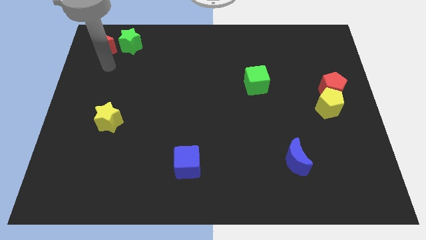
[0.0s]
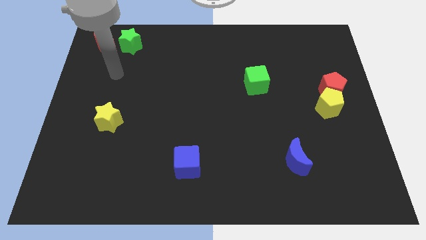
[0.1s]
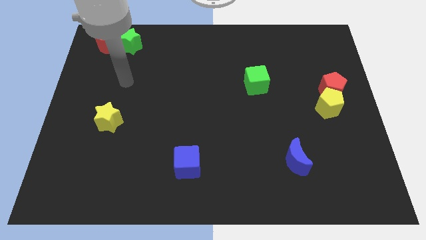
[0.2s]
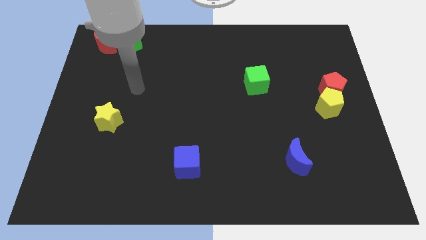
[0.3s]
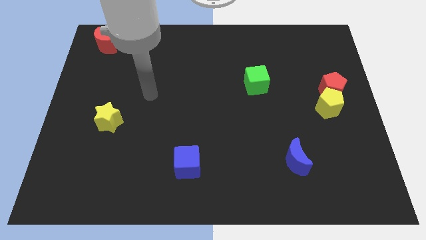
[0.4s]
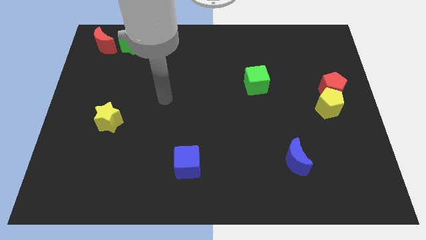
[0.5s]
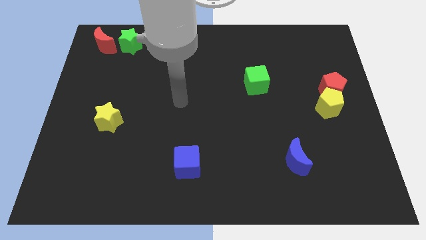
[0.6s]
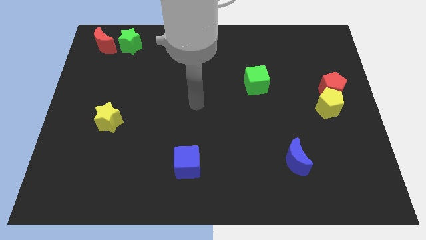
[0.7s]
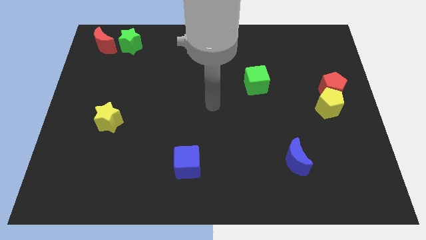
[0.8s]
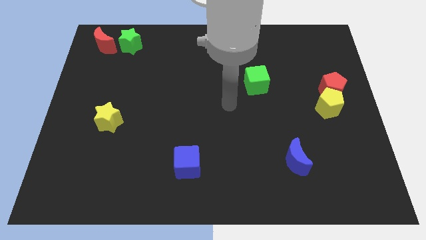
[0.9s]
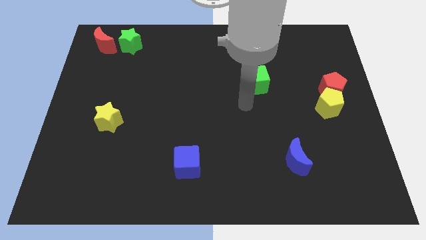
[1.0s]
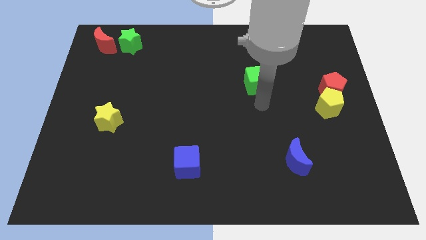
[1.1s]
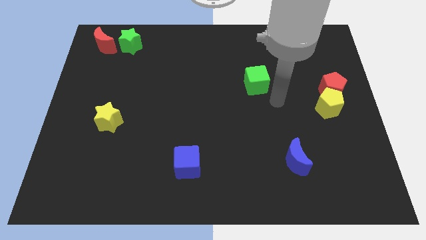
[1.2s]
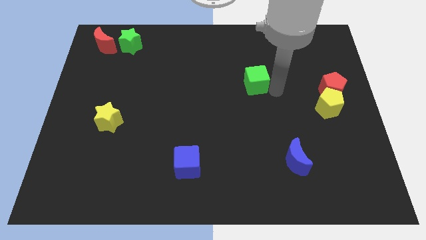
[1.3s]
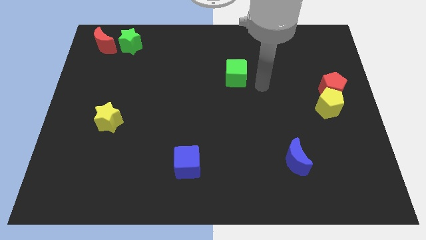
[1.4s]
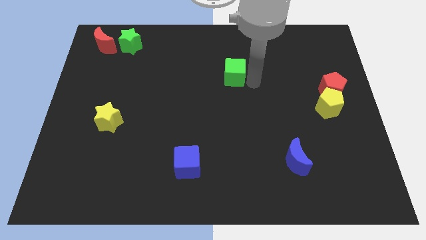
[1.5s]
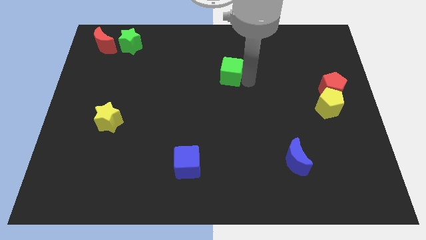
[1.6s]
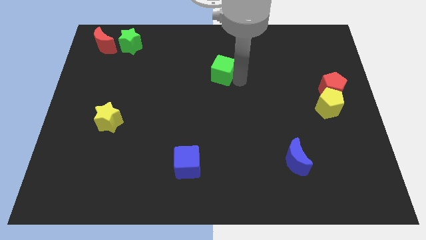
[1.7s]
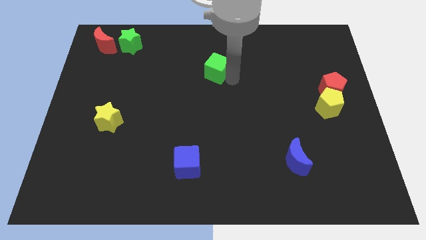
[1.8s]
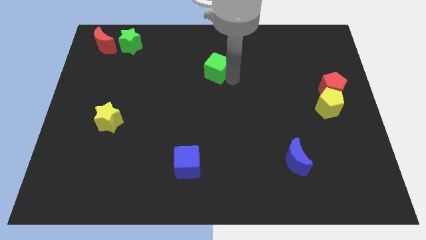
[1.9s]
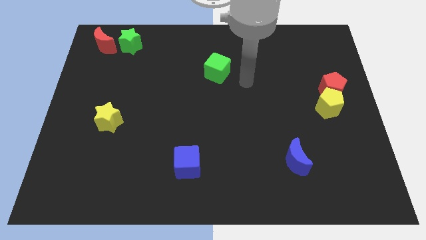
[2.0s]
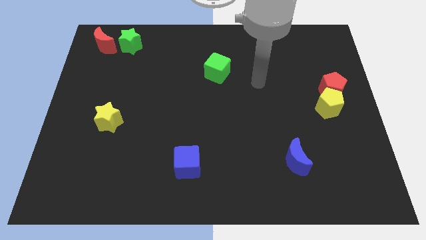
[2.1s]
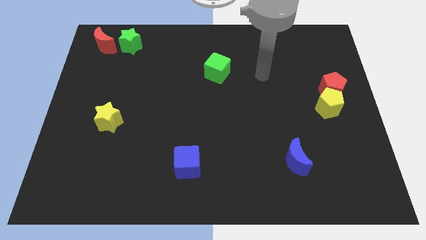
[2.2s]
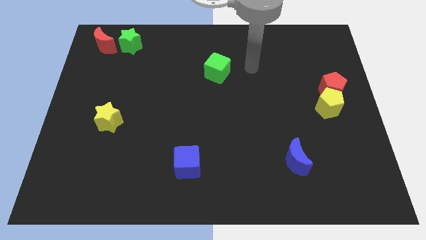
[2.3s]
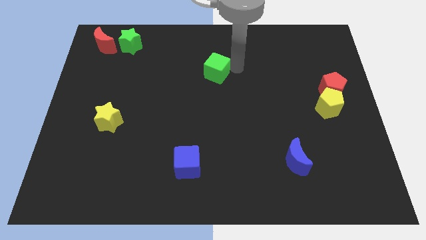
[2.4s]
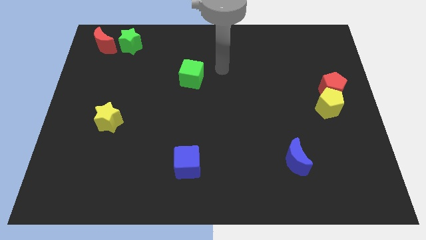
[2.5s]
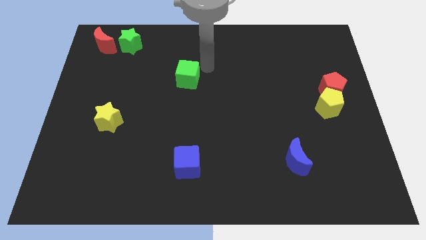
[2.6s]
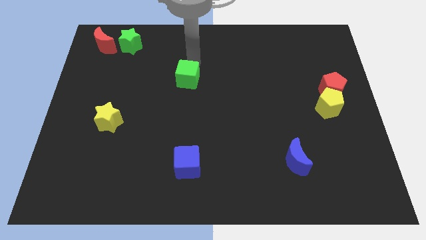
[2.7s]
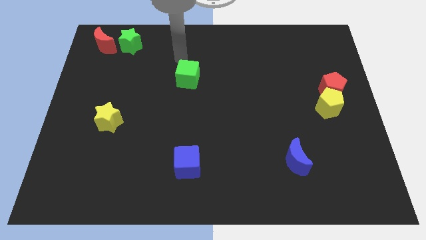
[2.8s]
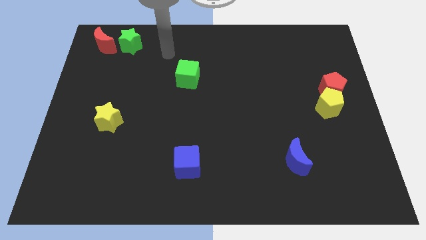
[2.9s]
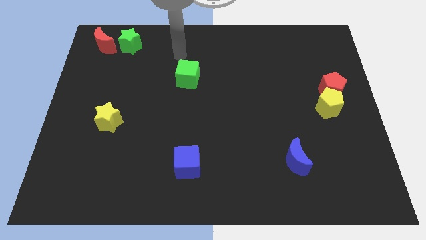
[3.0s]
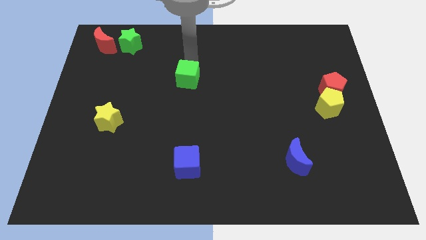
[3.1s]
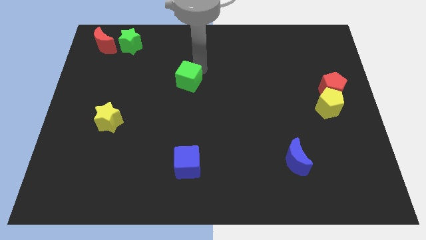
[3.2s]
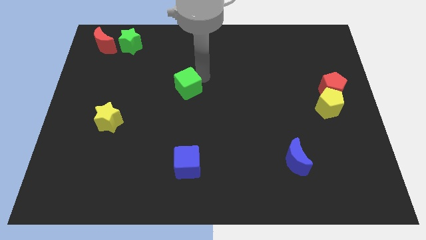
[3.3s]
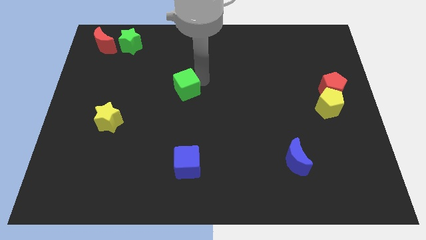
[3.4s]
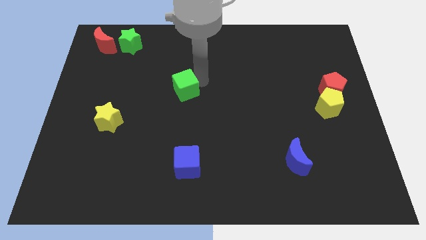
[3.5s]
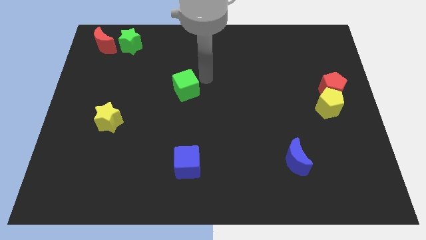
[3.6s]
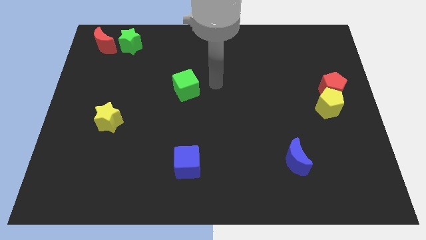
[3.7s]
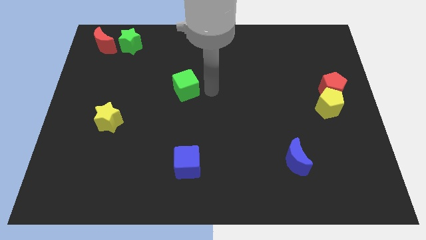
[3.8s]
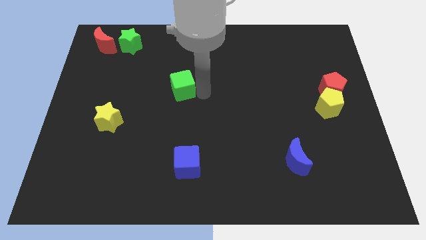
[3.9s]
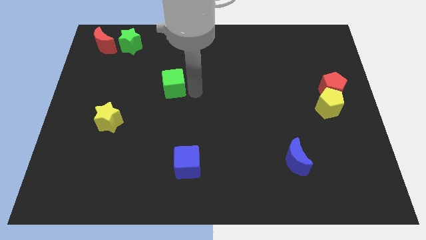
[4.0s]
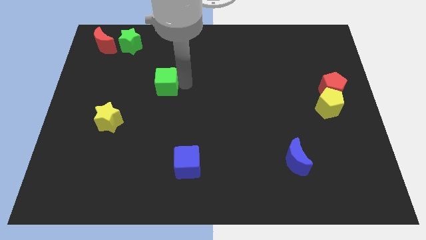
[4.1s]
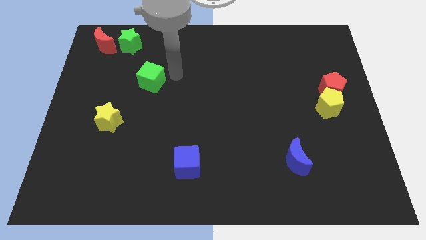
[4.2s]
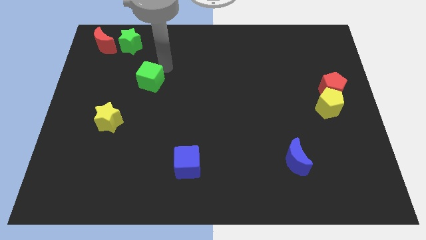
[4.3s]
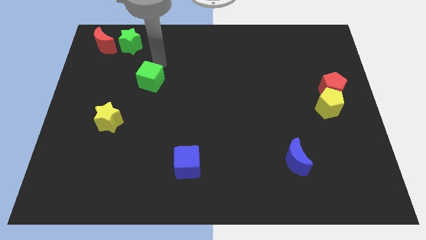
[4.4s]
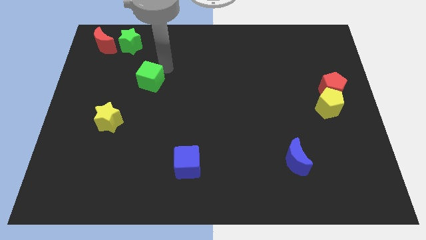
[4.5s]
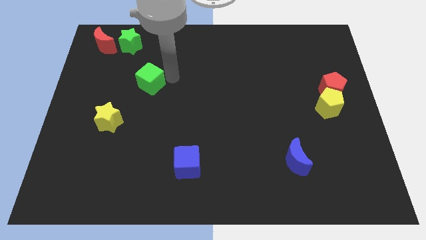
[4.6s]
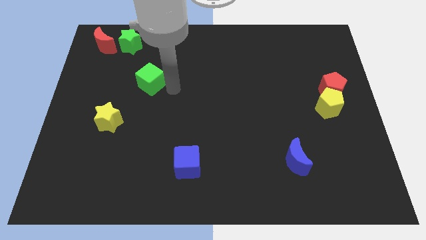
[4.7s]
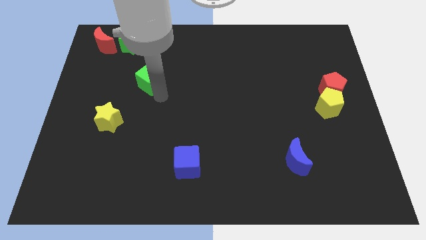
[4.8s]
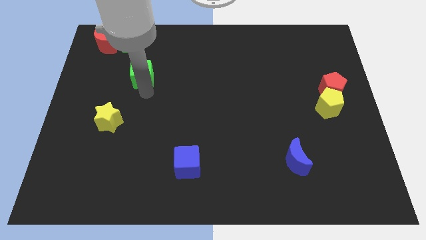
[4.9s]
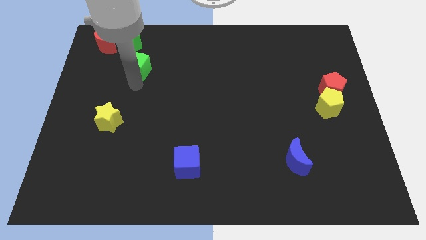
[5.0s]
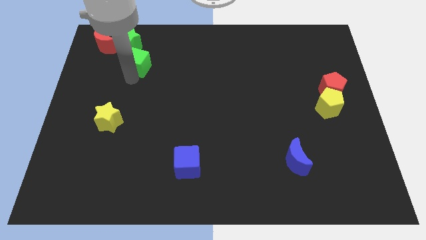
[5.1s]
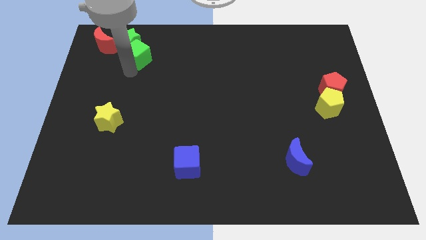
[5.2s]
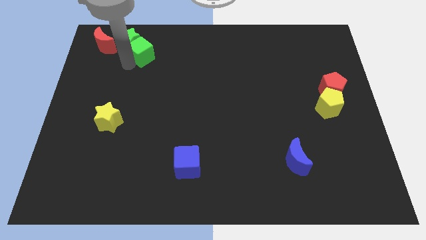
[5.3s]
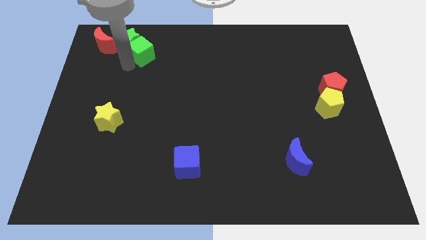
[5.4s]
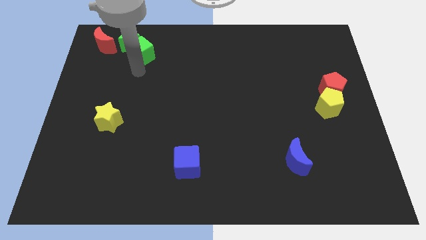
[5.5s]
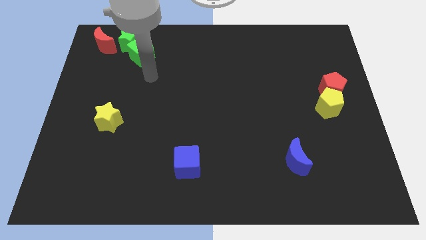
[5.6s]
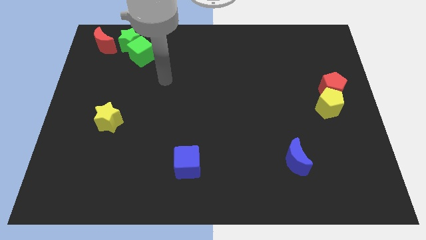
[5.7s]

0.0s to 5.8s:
move the green cube into the green star

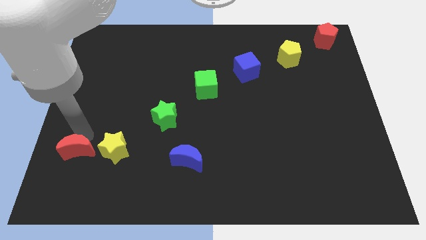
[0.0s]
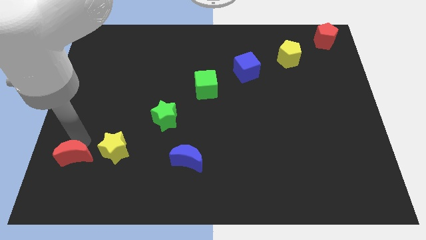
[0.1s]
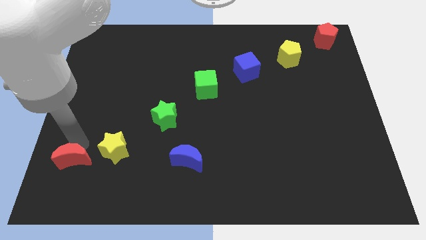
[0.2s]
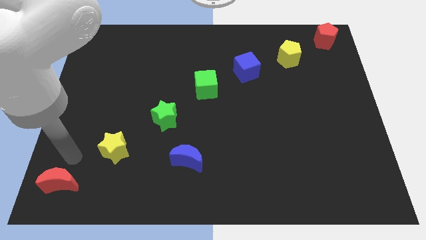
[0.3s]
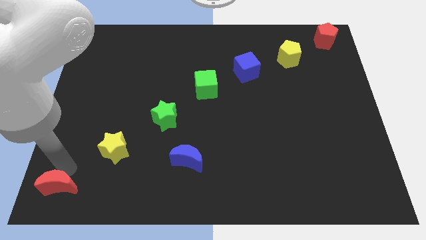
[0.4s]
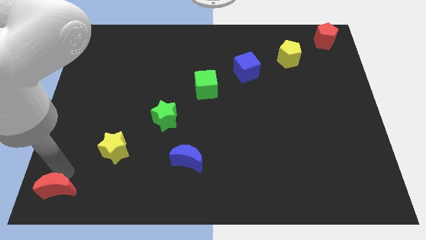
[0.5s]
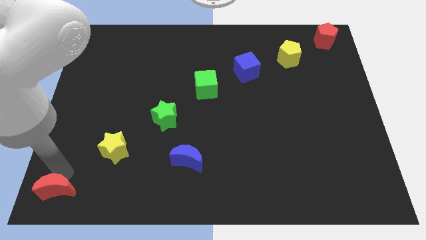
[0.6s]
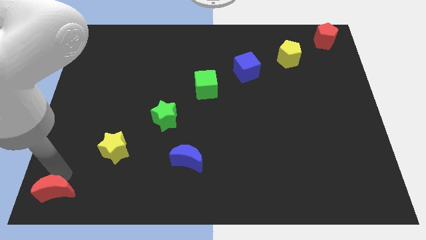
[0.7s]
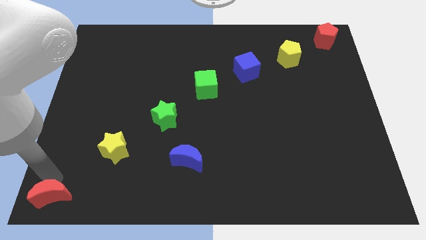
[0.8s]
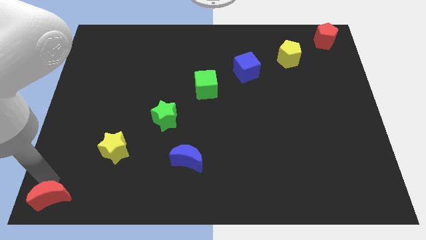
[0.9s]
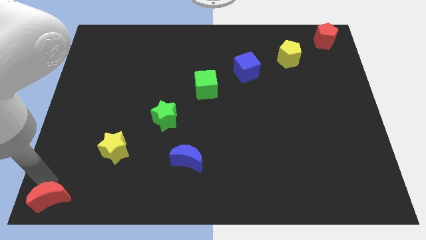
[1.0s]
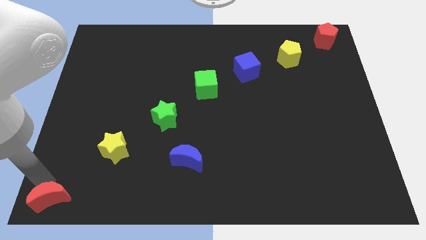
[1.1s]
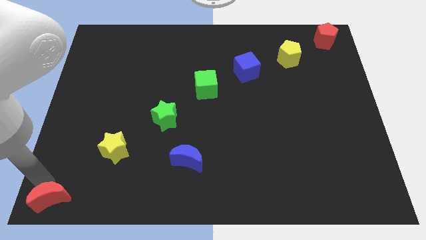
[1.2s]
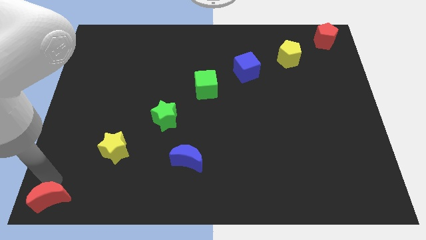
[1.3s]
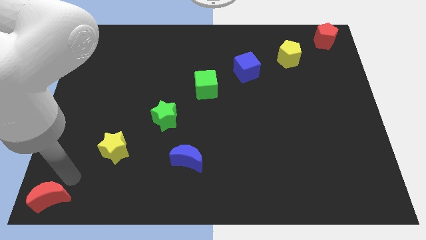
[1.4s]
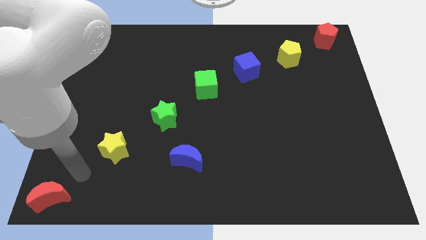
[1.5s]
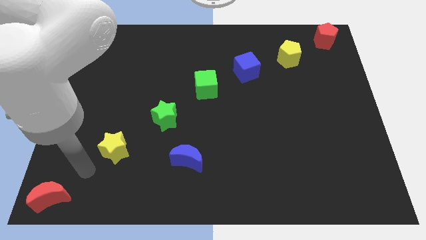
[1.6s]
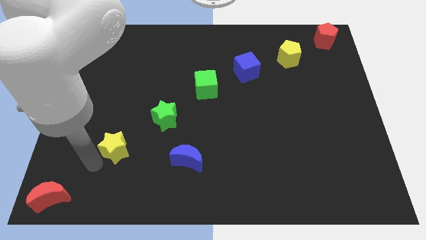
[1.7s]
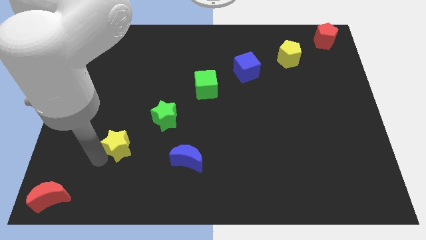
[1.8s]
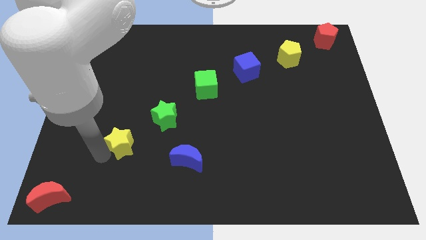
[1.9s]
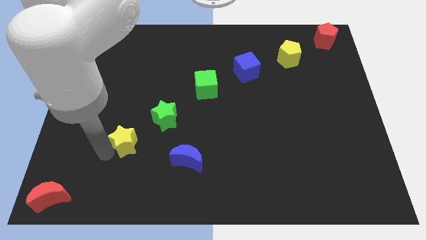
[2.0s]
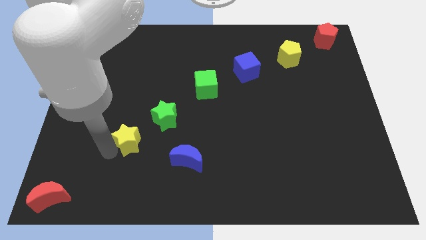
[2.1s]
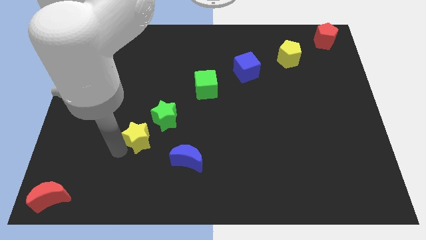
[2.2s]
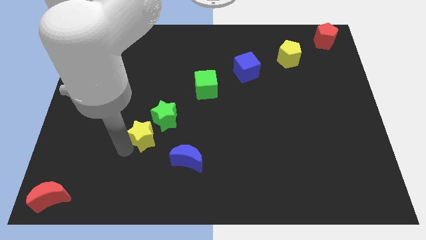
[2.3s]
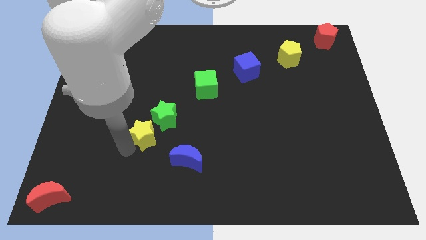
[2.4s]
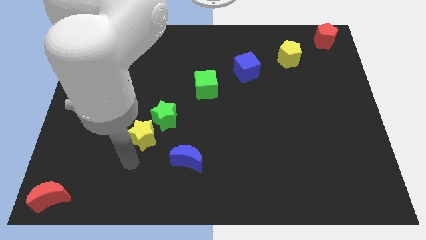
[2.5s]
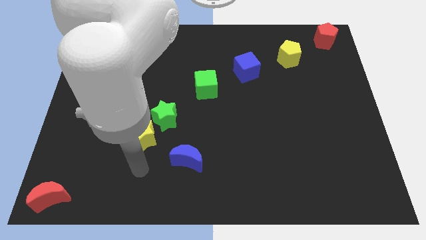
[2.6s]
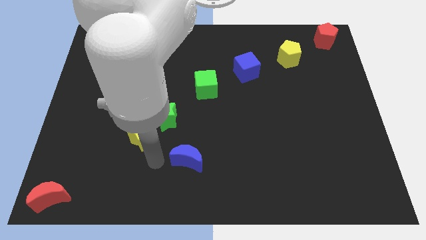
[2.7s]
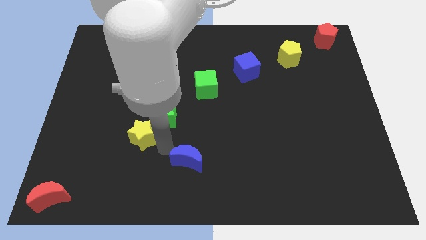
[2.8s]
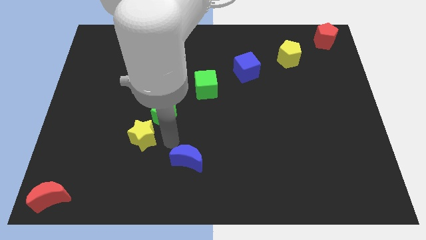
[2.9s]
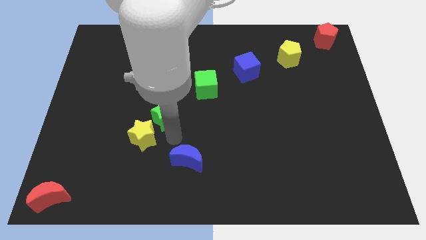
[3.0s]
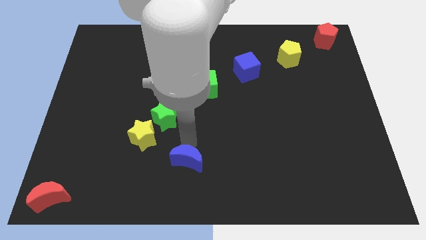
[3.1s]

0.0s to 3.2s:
put the yellow star towards the green star
